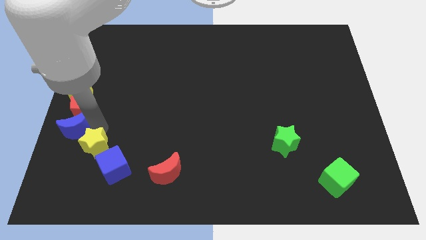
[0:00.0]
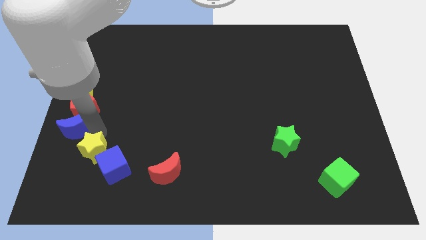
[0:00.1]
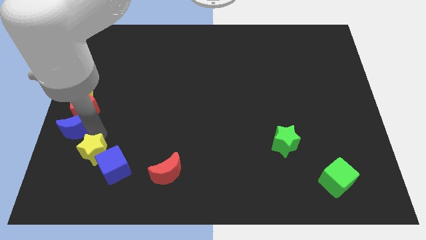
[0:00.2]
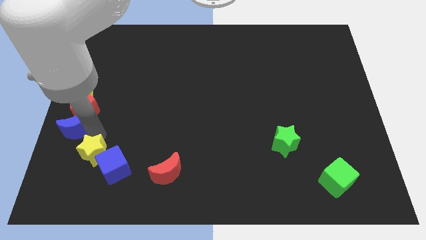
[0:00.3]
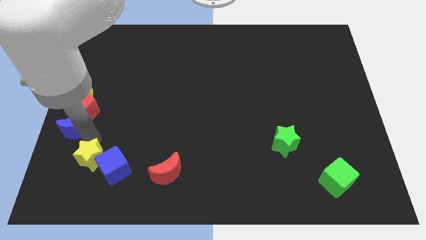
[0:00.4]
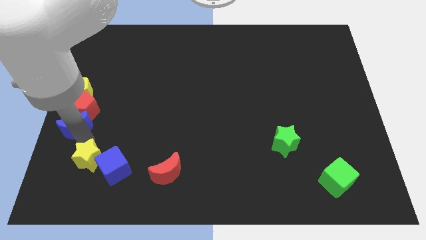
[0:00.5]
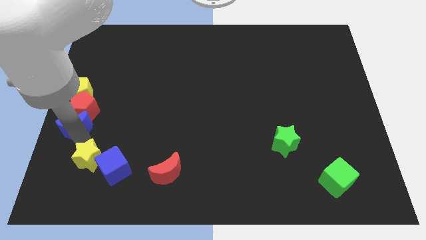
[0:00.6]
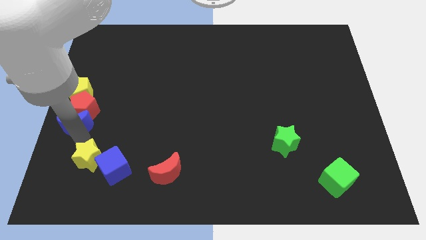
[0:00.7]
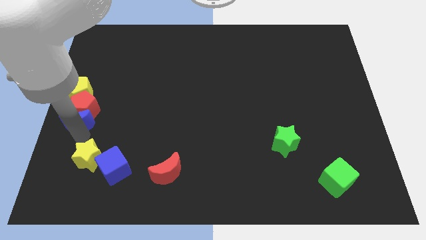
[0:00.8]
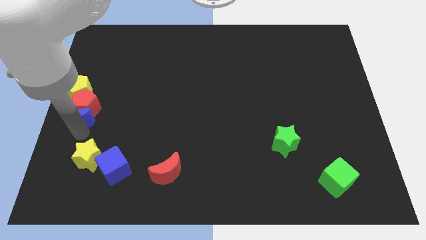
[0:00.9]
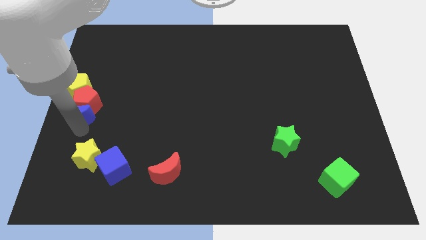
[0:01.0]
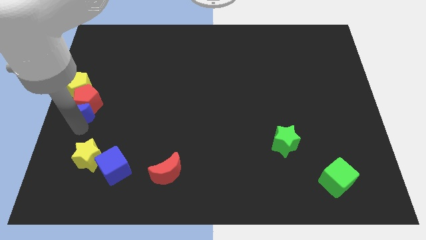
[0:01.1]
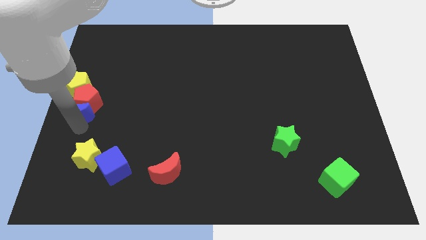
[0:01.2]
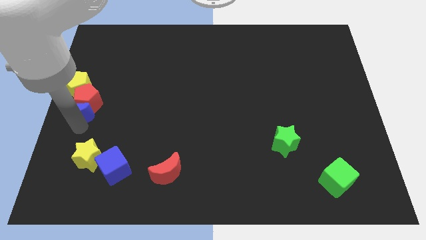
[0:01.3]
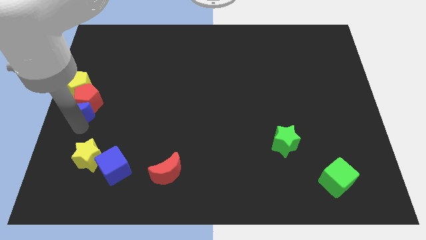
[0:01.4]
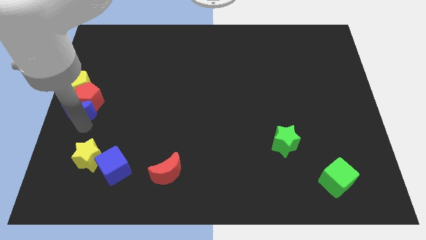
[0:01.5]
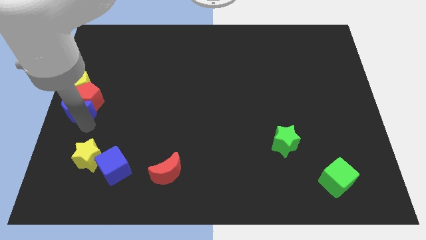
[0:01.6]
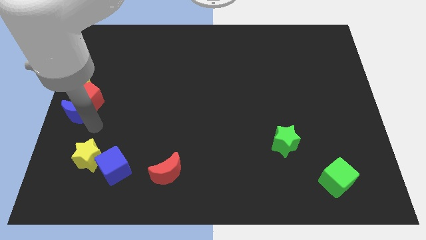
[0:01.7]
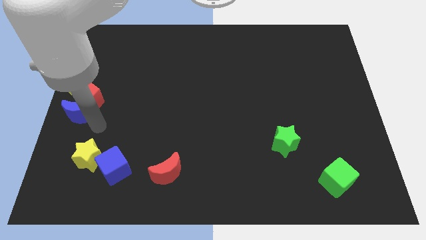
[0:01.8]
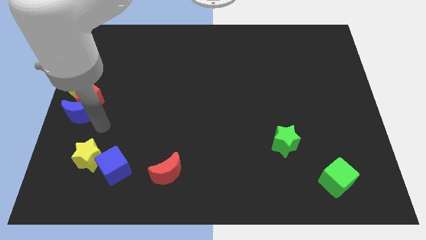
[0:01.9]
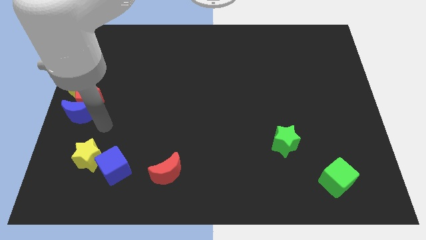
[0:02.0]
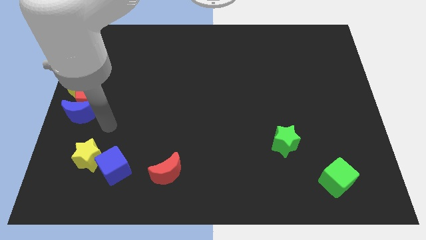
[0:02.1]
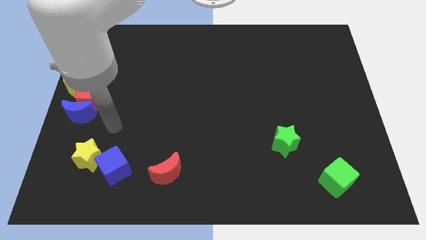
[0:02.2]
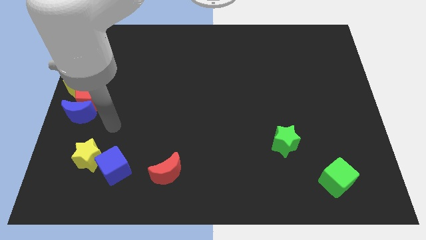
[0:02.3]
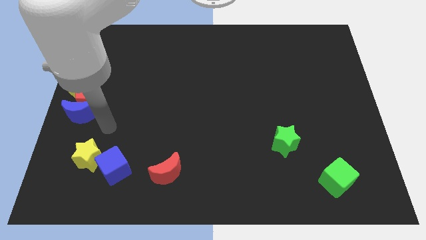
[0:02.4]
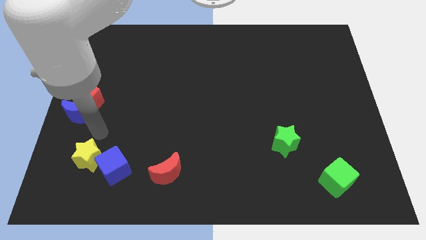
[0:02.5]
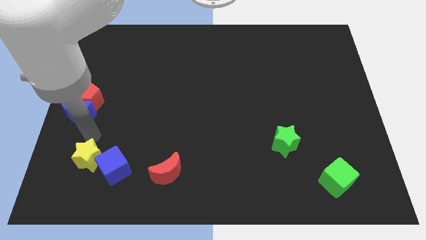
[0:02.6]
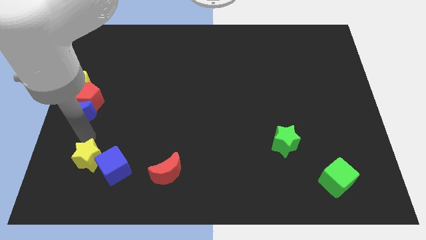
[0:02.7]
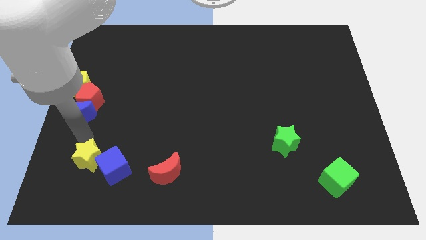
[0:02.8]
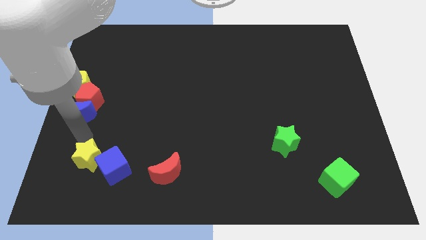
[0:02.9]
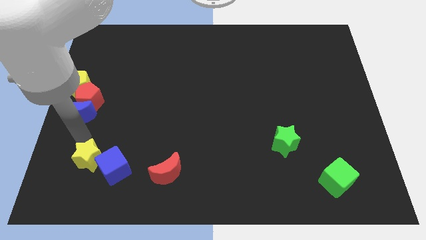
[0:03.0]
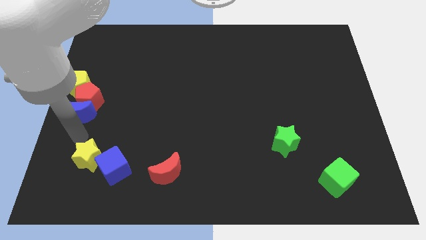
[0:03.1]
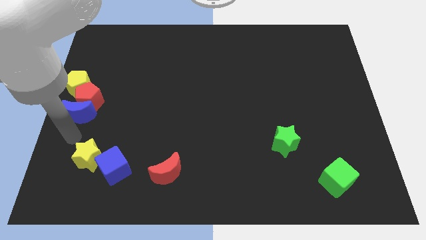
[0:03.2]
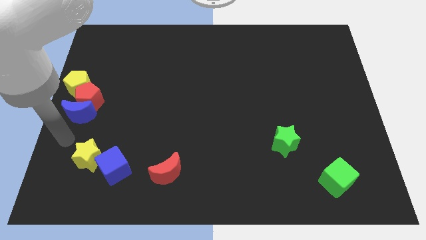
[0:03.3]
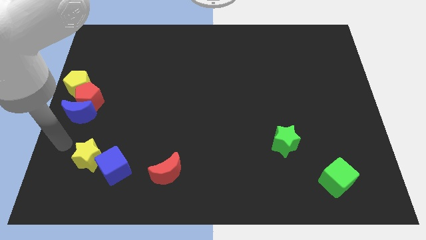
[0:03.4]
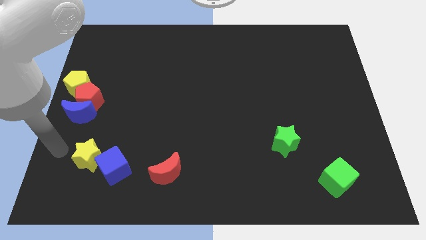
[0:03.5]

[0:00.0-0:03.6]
separate yellow star and the group of blocks

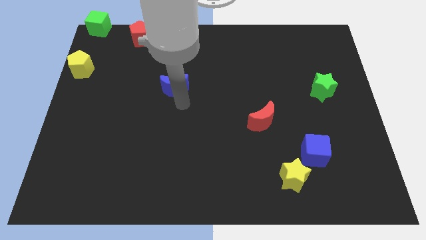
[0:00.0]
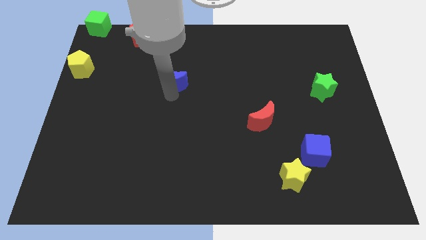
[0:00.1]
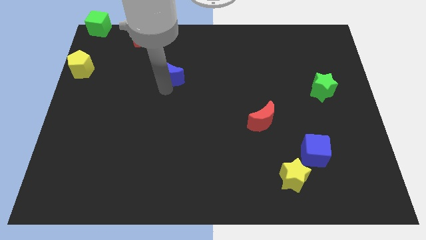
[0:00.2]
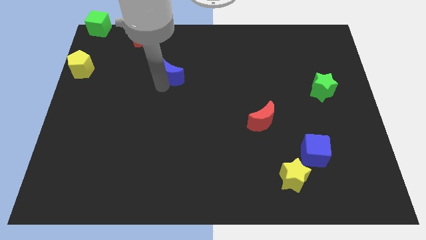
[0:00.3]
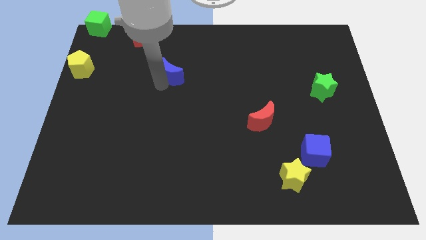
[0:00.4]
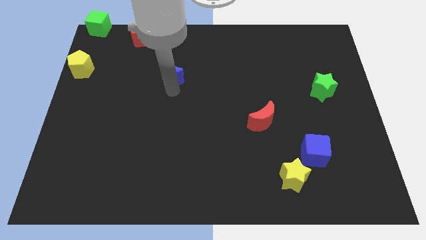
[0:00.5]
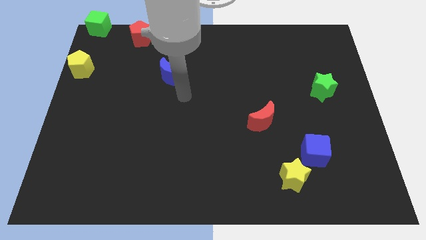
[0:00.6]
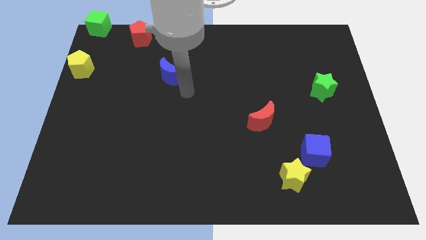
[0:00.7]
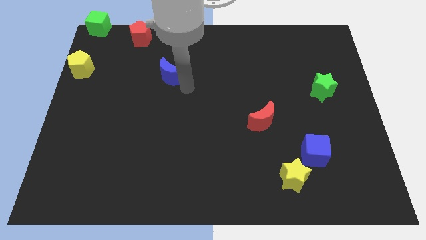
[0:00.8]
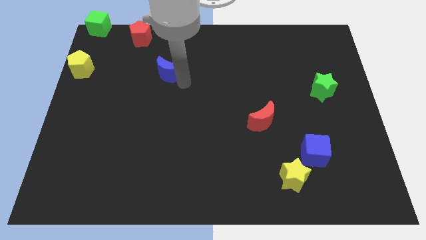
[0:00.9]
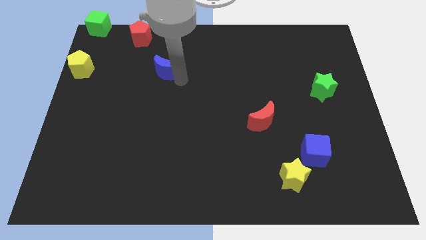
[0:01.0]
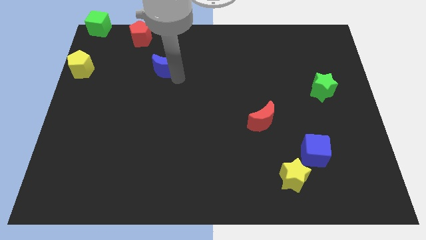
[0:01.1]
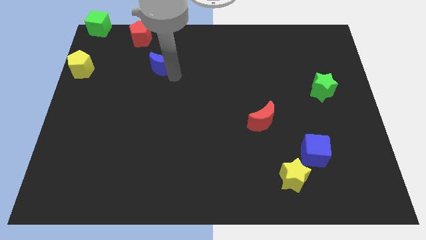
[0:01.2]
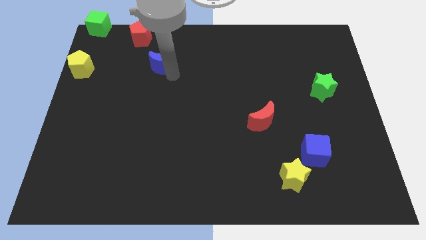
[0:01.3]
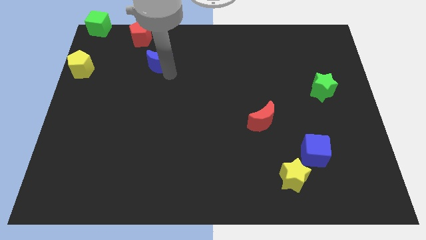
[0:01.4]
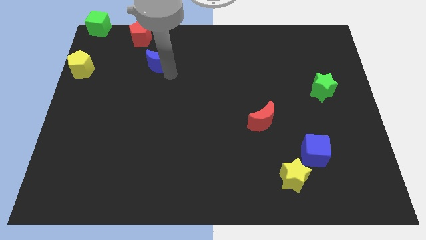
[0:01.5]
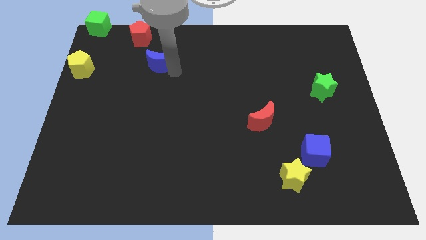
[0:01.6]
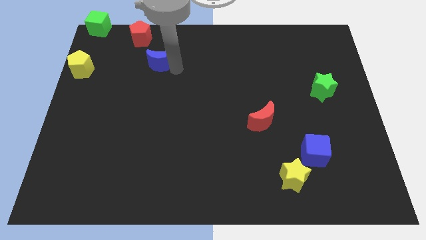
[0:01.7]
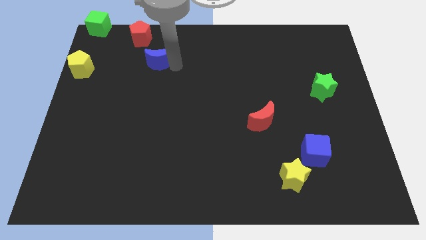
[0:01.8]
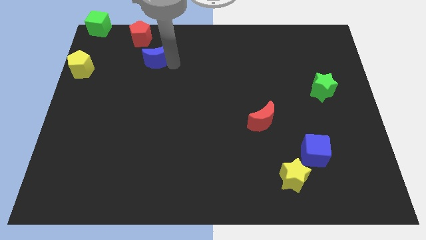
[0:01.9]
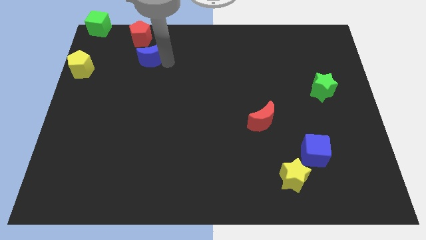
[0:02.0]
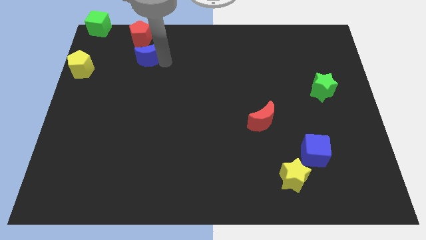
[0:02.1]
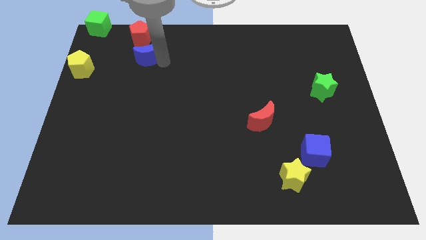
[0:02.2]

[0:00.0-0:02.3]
place the blue moon below the red pentagon

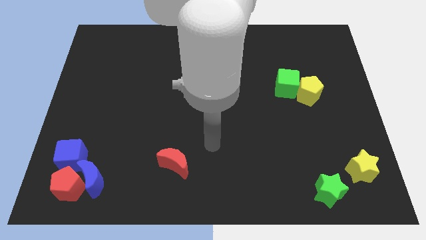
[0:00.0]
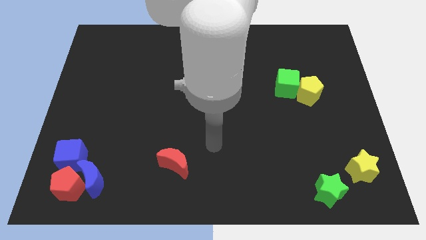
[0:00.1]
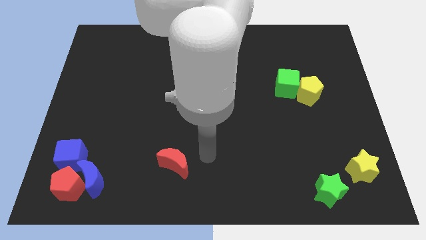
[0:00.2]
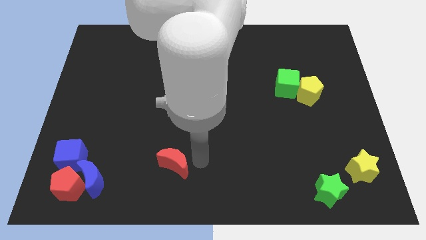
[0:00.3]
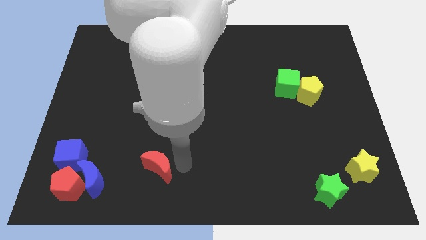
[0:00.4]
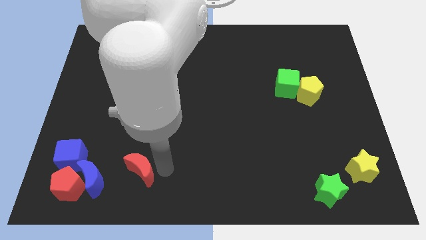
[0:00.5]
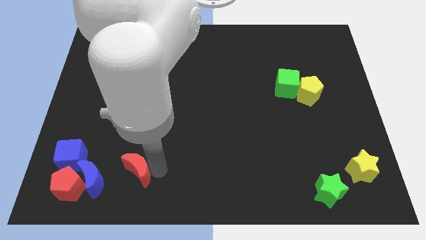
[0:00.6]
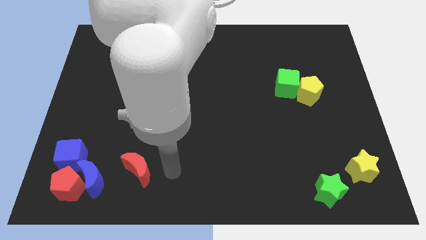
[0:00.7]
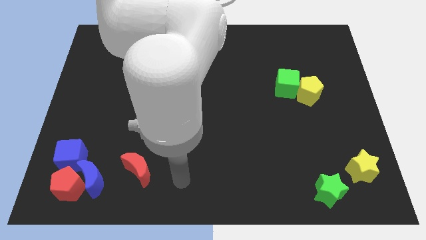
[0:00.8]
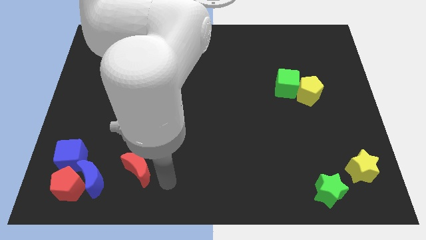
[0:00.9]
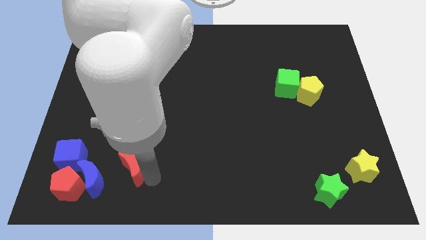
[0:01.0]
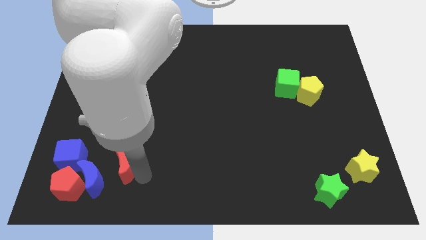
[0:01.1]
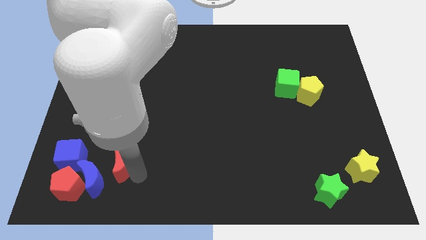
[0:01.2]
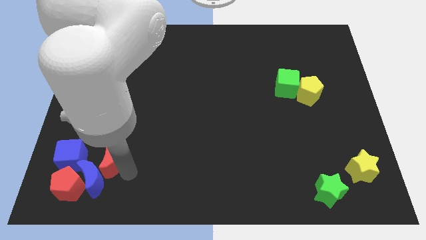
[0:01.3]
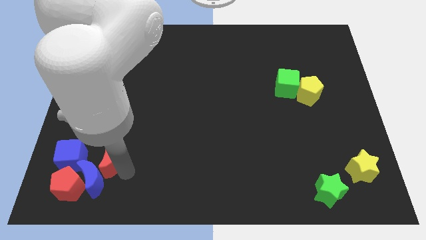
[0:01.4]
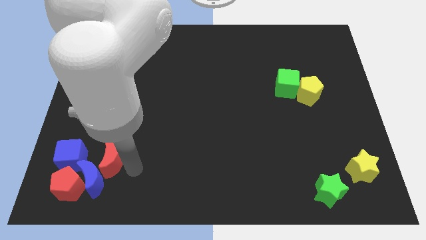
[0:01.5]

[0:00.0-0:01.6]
place the red moon on top of blue moon

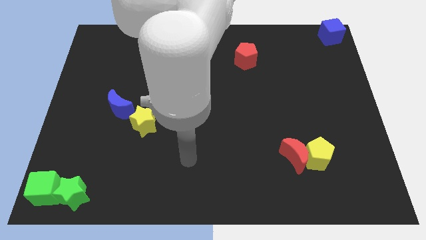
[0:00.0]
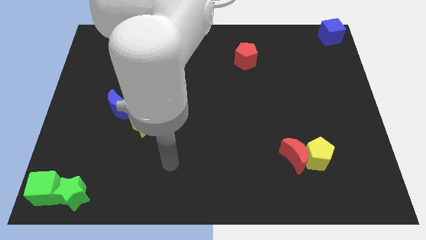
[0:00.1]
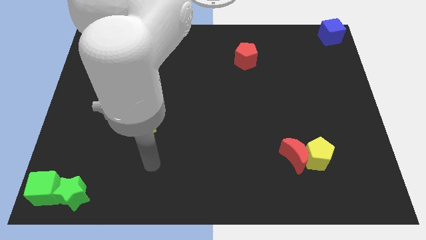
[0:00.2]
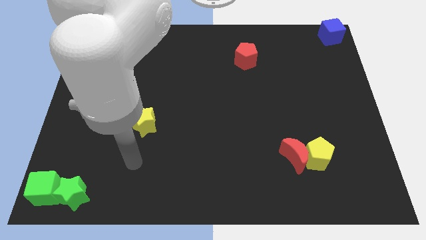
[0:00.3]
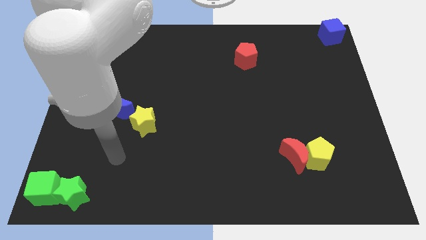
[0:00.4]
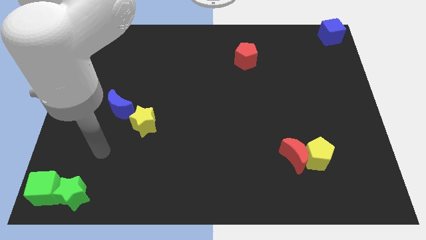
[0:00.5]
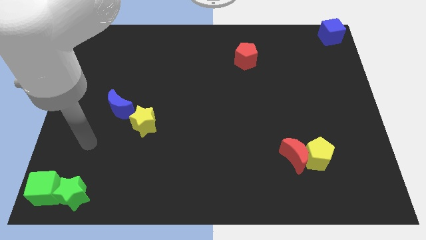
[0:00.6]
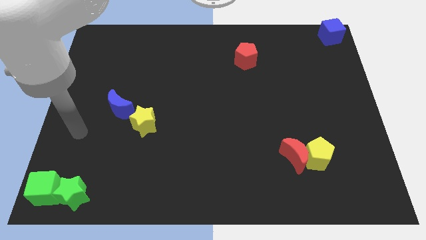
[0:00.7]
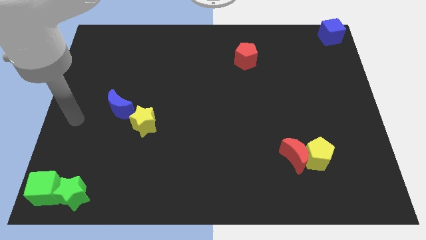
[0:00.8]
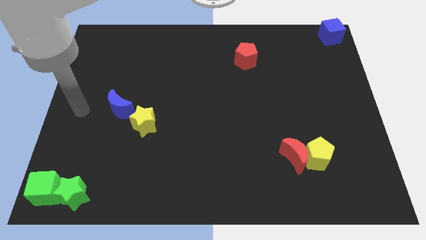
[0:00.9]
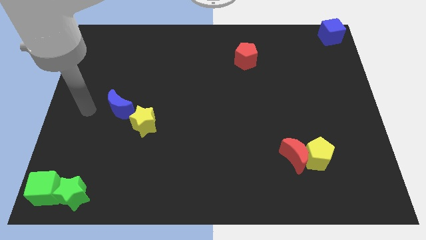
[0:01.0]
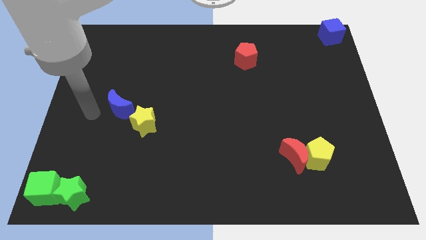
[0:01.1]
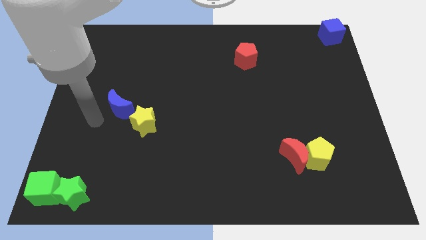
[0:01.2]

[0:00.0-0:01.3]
move your arm to the left of the blue crescent
